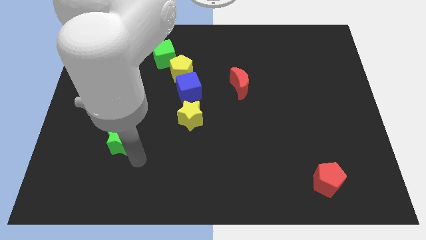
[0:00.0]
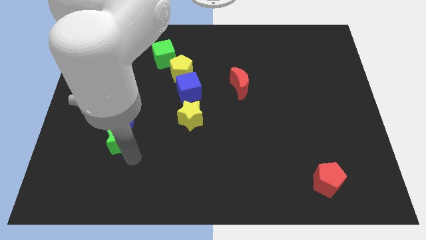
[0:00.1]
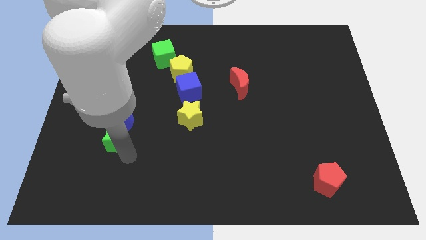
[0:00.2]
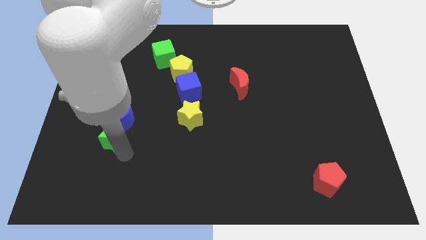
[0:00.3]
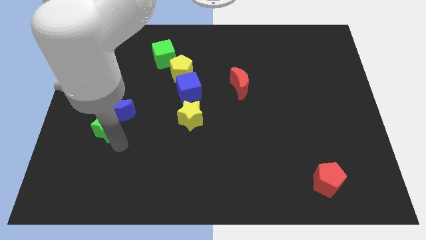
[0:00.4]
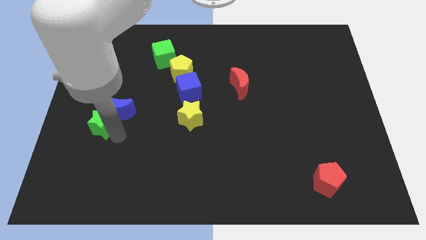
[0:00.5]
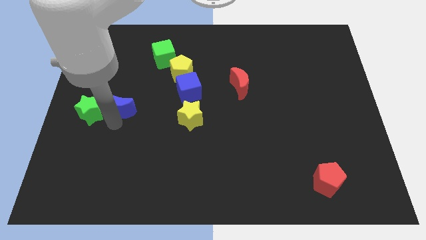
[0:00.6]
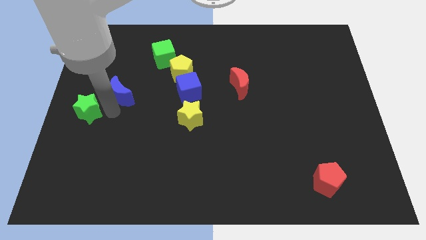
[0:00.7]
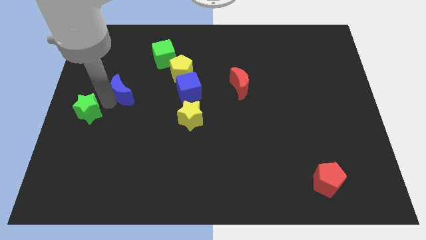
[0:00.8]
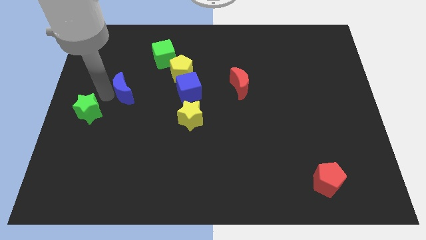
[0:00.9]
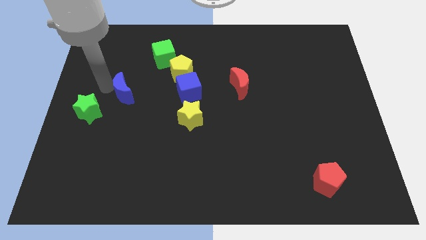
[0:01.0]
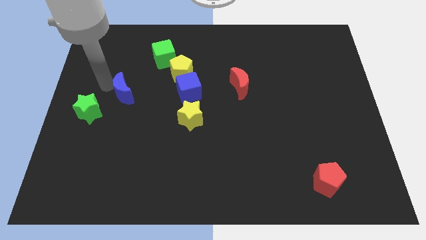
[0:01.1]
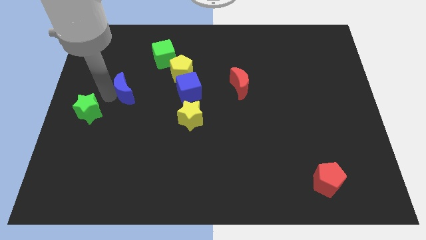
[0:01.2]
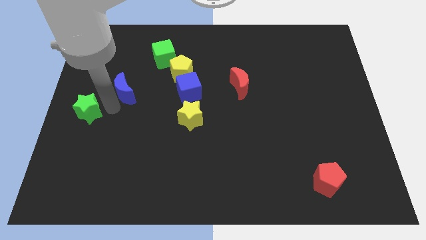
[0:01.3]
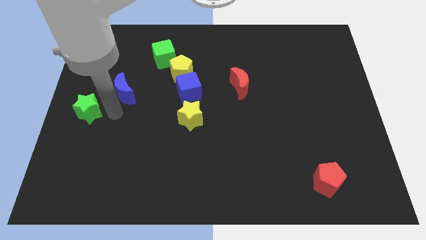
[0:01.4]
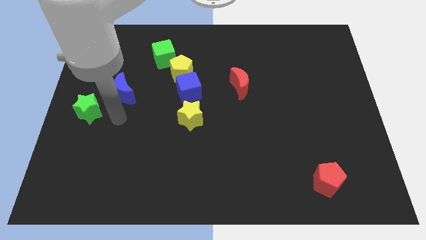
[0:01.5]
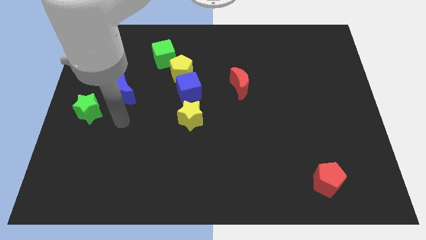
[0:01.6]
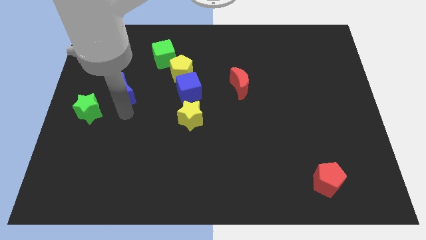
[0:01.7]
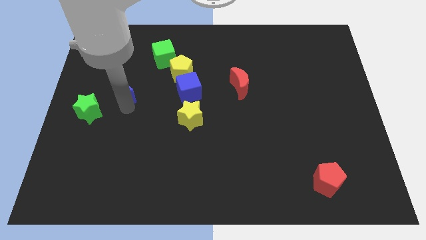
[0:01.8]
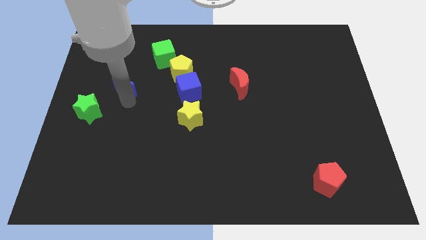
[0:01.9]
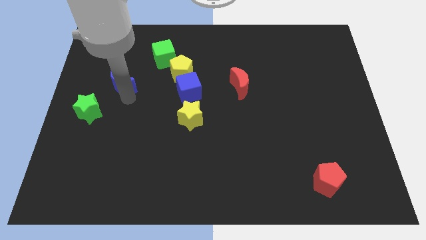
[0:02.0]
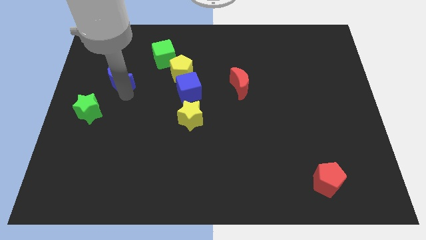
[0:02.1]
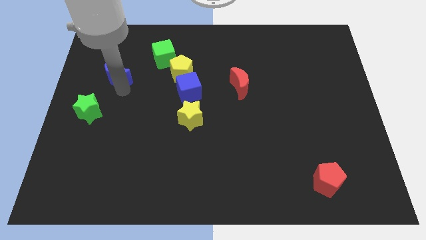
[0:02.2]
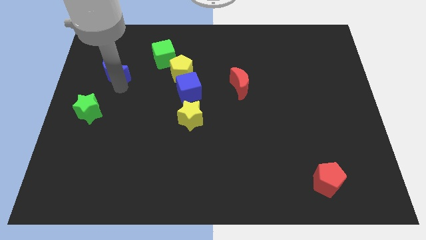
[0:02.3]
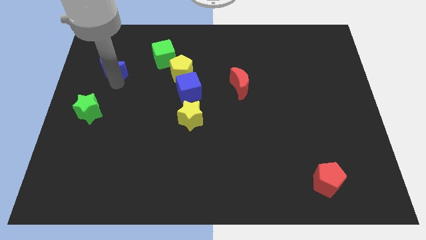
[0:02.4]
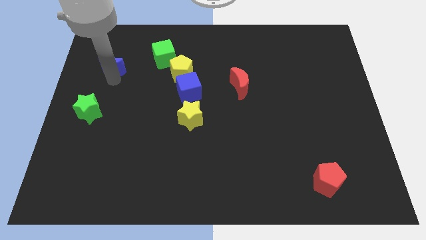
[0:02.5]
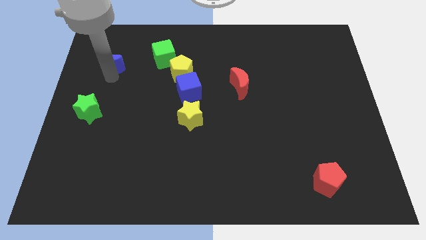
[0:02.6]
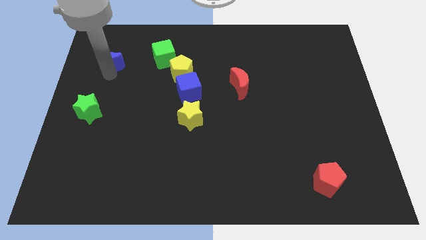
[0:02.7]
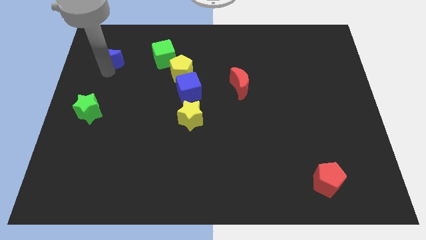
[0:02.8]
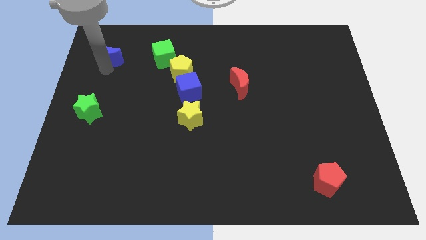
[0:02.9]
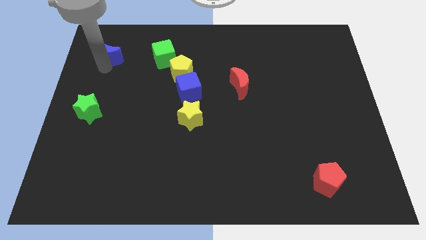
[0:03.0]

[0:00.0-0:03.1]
push blue crescent vertically above green star

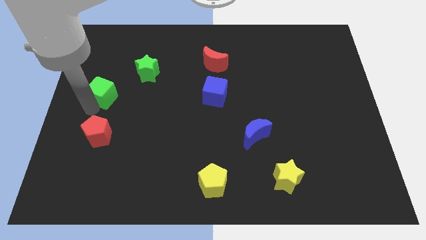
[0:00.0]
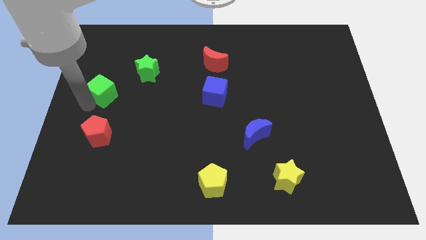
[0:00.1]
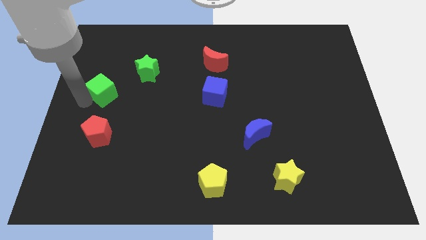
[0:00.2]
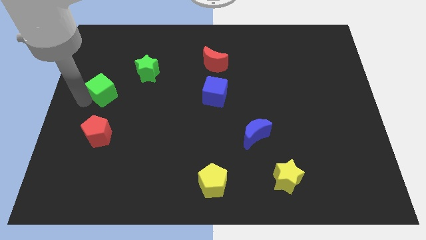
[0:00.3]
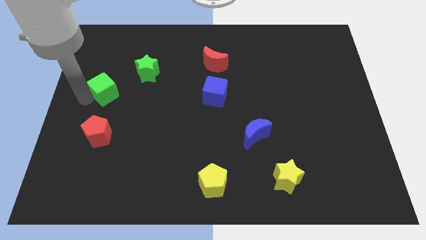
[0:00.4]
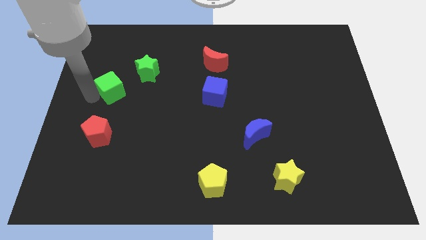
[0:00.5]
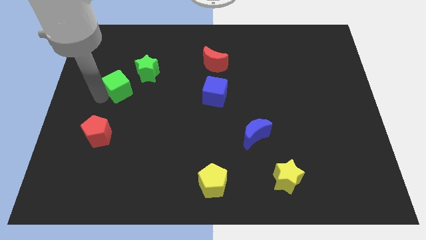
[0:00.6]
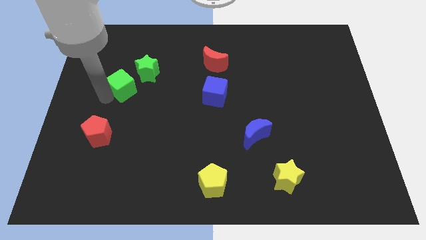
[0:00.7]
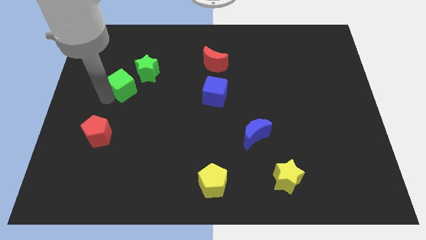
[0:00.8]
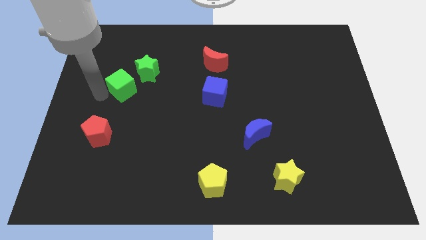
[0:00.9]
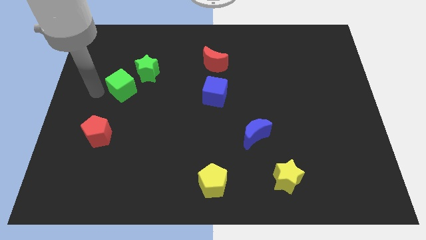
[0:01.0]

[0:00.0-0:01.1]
push the green cube diagonally to the bottom left of the green star

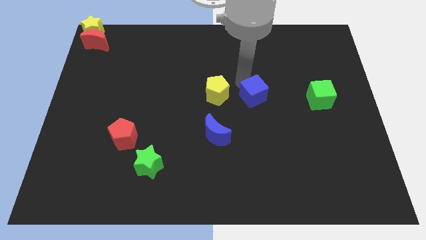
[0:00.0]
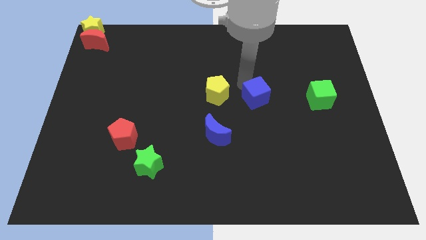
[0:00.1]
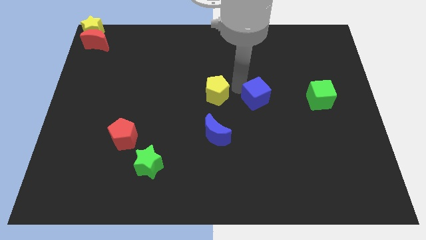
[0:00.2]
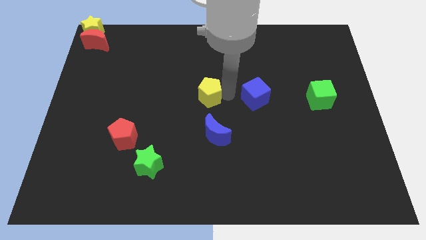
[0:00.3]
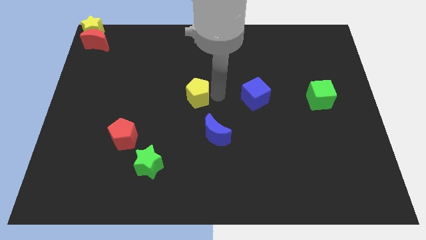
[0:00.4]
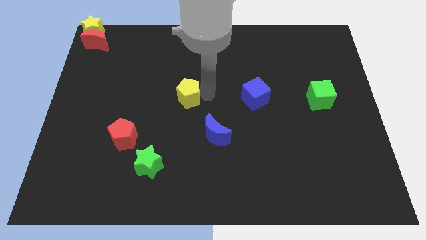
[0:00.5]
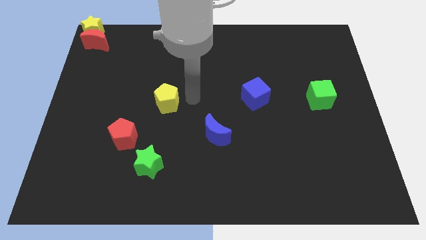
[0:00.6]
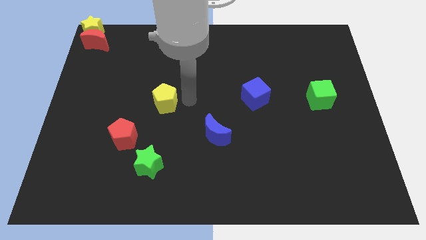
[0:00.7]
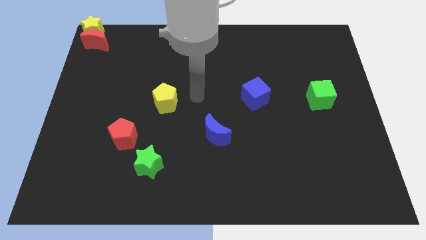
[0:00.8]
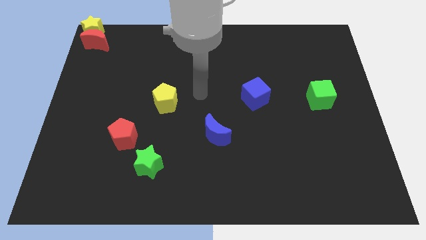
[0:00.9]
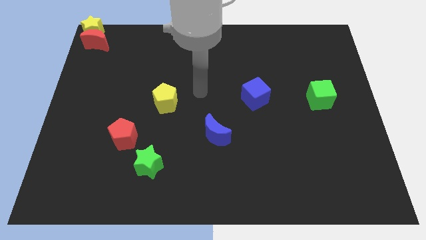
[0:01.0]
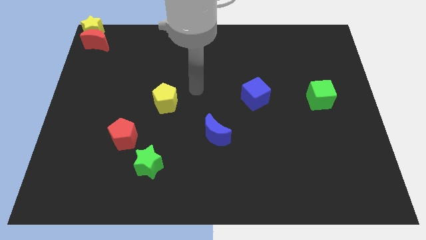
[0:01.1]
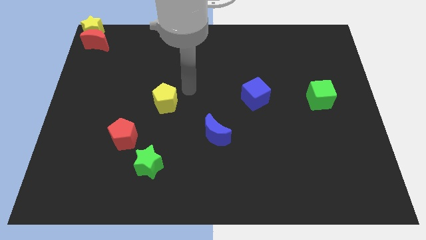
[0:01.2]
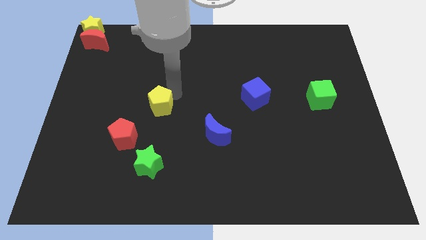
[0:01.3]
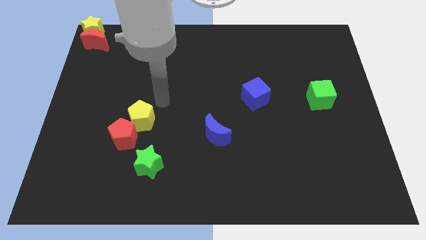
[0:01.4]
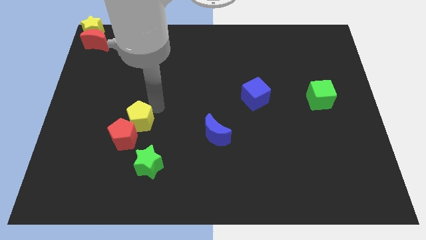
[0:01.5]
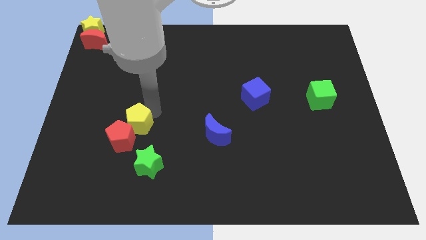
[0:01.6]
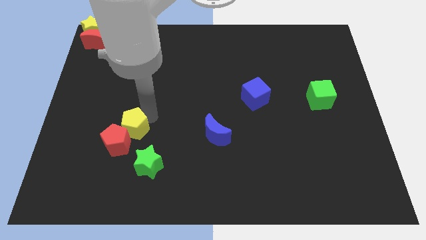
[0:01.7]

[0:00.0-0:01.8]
push the yellow pentagon into the red pentagon

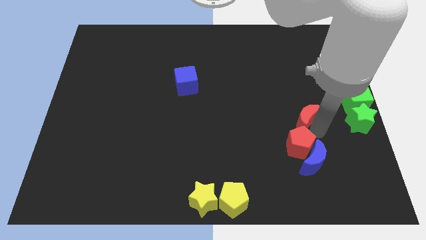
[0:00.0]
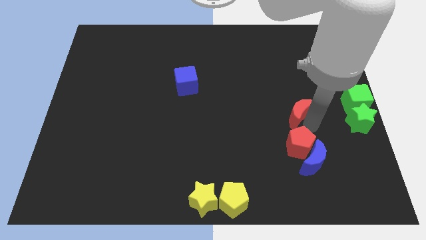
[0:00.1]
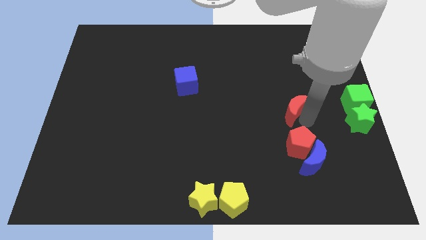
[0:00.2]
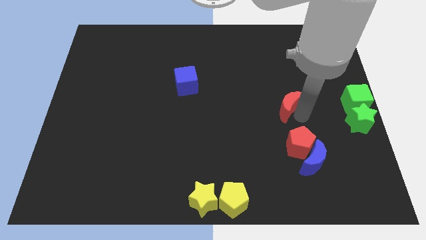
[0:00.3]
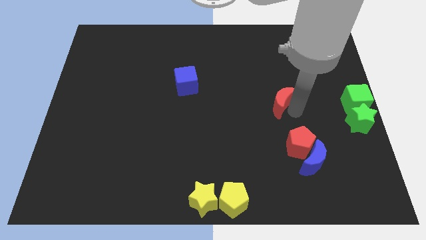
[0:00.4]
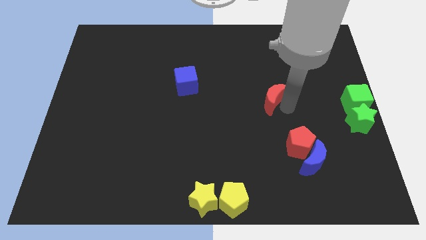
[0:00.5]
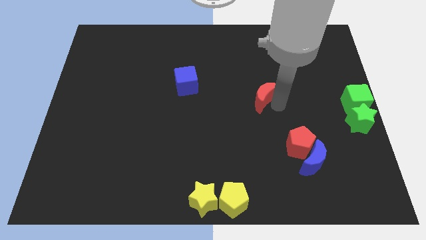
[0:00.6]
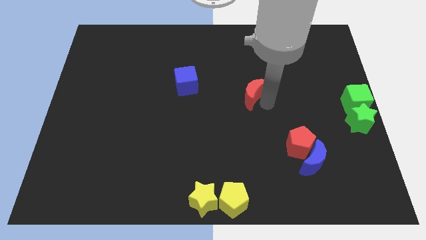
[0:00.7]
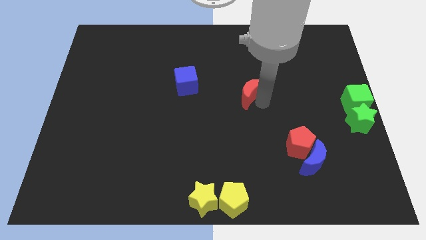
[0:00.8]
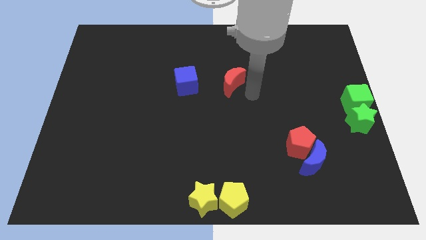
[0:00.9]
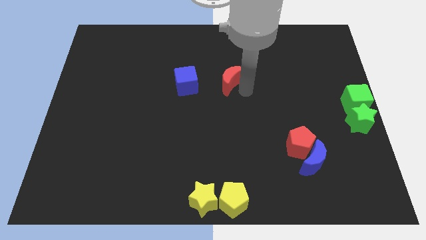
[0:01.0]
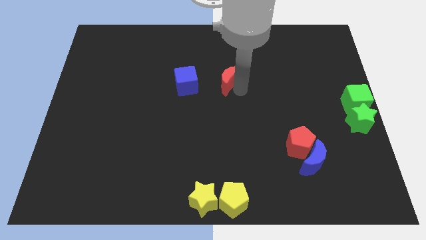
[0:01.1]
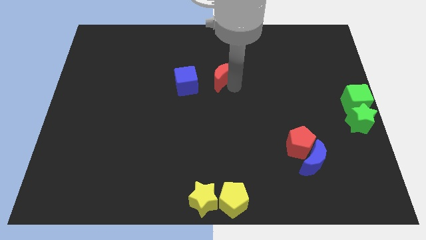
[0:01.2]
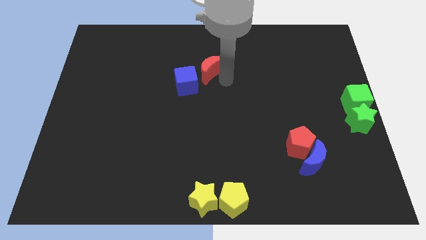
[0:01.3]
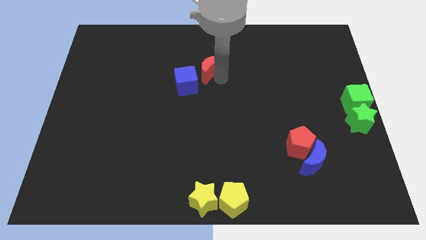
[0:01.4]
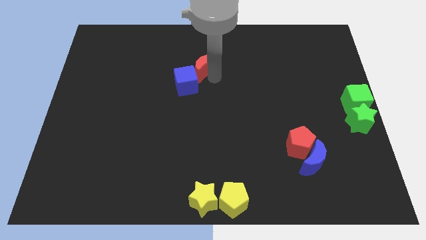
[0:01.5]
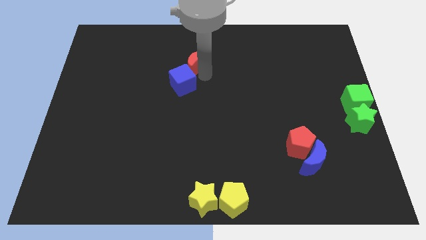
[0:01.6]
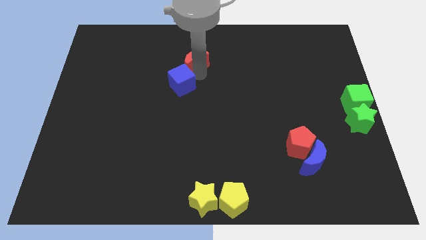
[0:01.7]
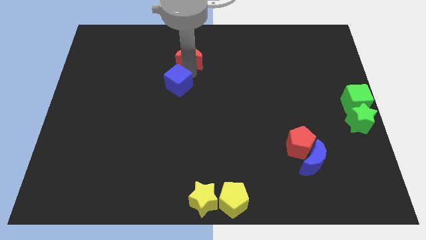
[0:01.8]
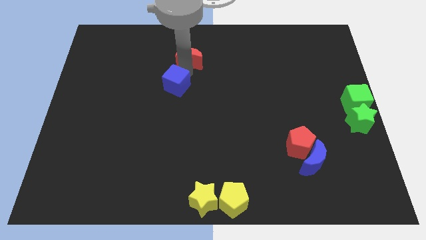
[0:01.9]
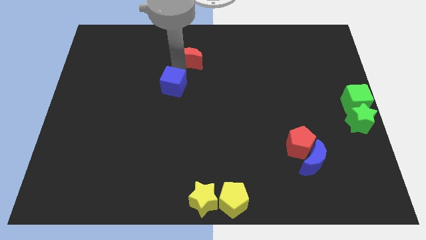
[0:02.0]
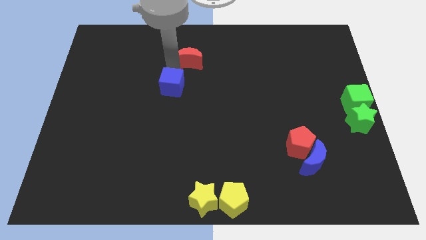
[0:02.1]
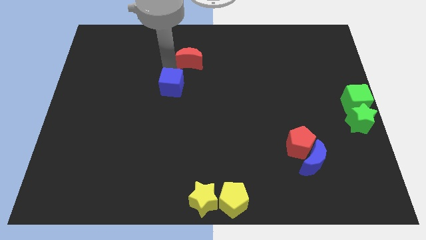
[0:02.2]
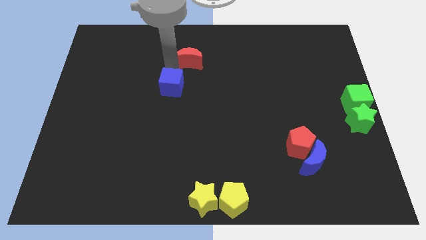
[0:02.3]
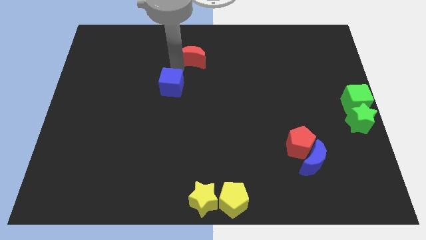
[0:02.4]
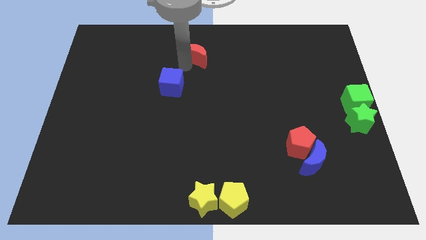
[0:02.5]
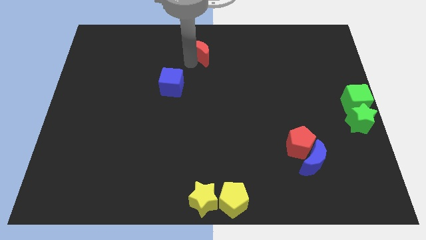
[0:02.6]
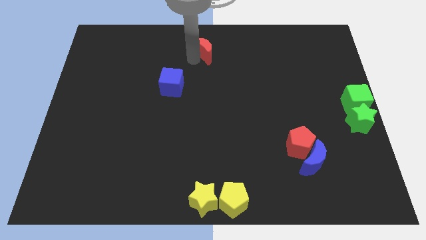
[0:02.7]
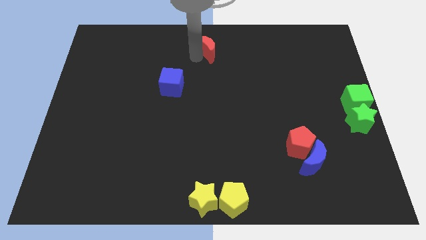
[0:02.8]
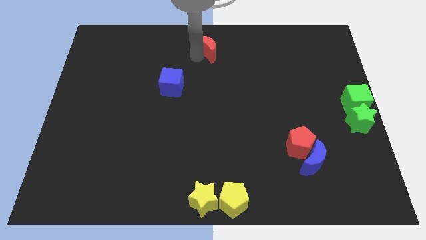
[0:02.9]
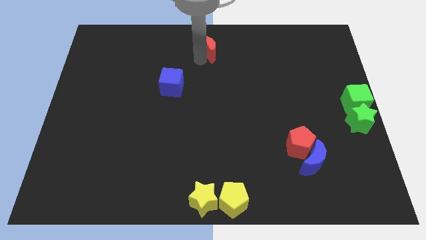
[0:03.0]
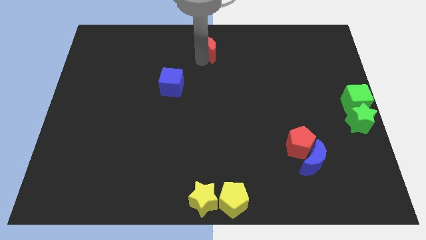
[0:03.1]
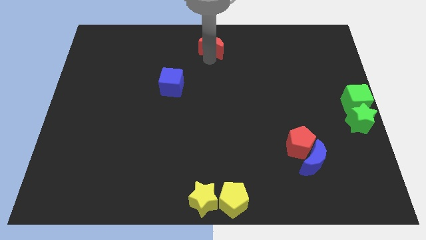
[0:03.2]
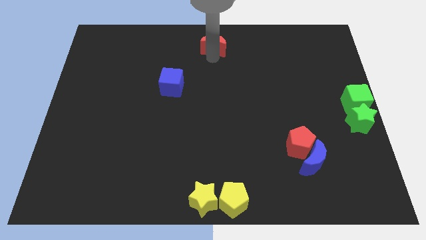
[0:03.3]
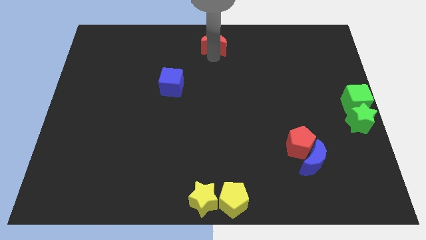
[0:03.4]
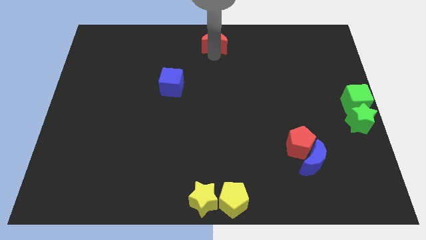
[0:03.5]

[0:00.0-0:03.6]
move the red moon towards the top center
